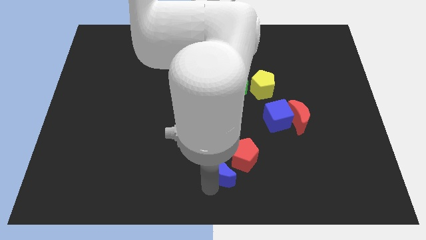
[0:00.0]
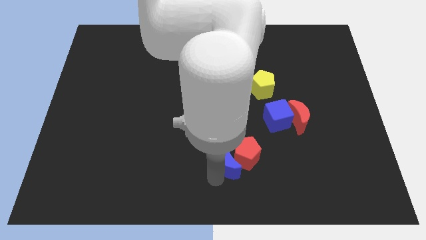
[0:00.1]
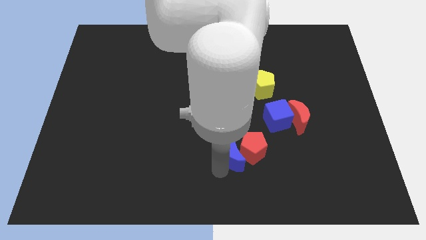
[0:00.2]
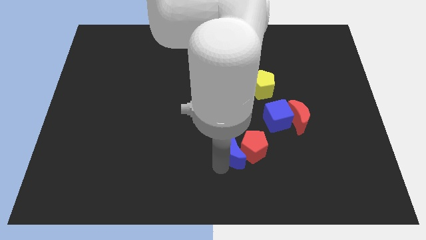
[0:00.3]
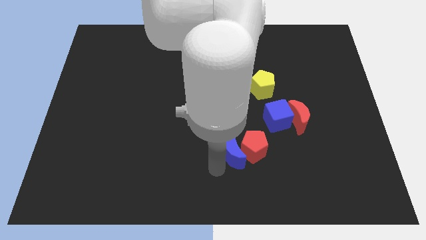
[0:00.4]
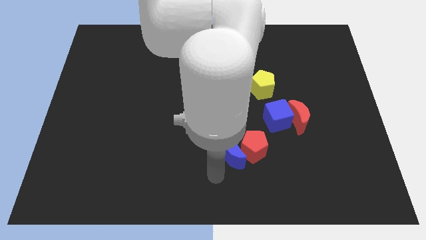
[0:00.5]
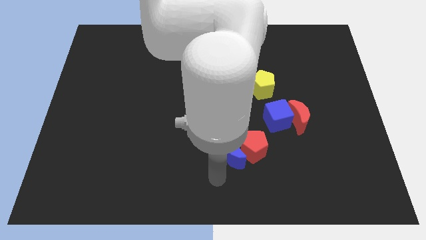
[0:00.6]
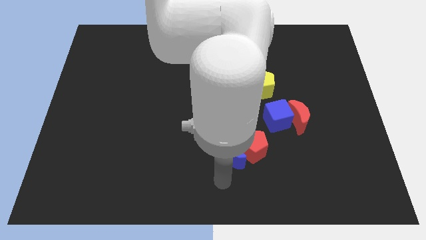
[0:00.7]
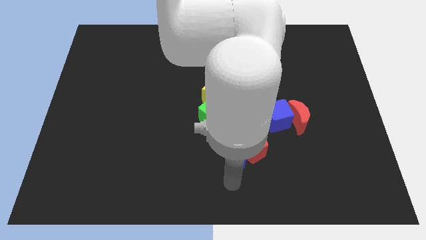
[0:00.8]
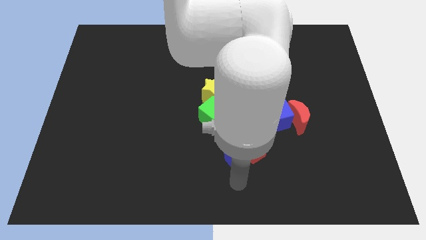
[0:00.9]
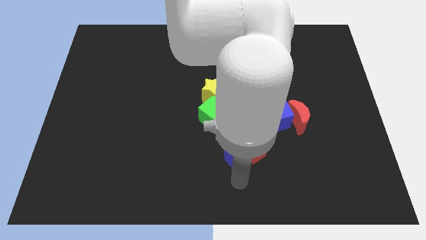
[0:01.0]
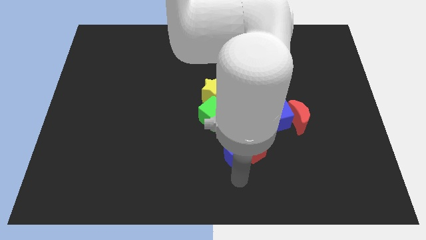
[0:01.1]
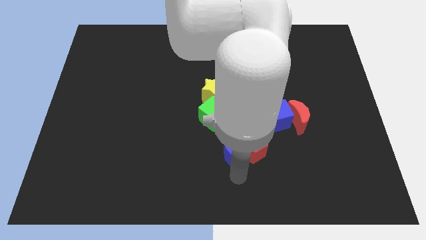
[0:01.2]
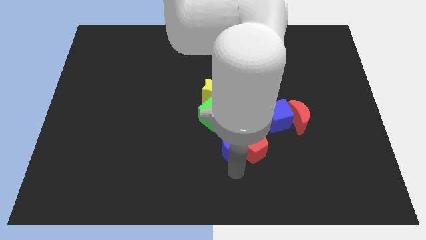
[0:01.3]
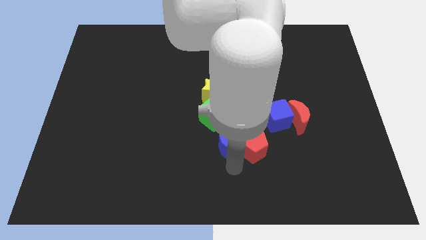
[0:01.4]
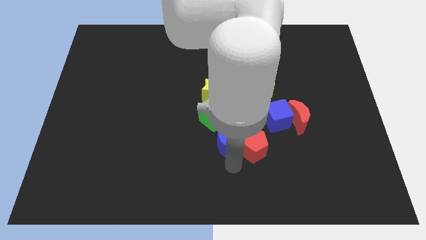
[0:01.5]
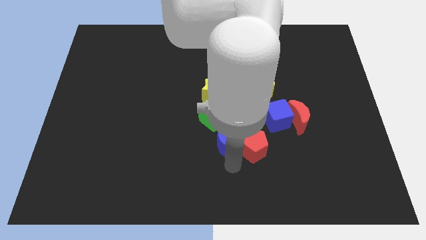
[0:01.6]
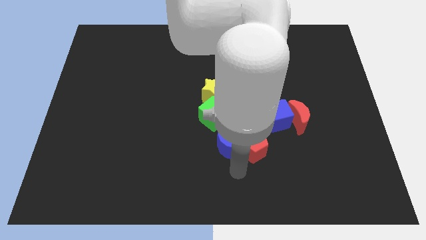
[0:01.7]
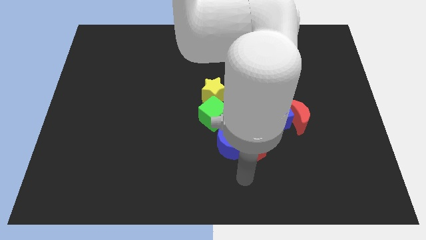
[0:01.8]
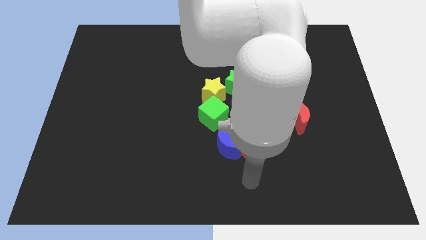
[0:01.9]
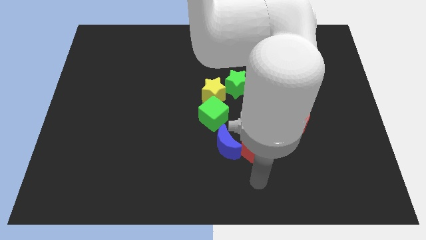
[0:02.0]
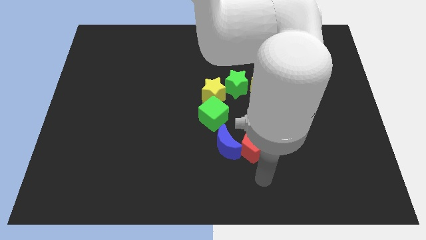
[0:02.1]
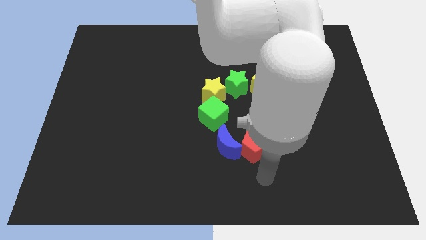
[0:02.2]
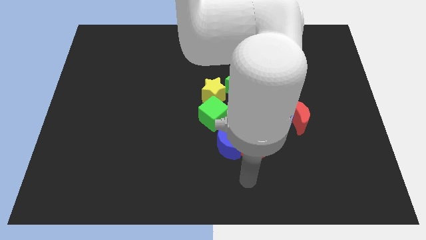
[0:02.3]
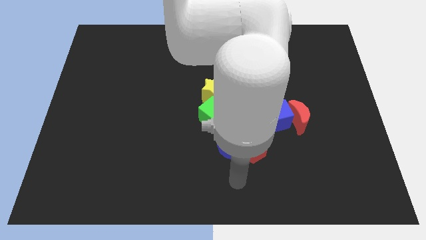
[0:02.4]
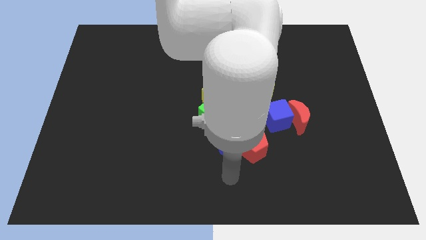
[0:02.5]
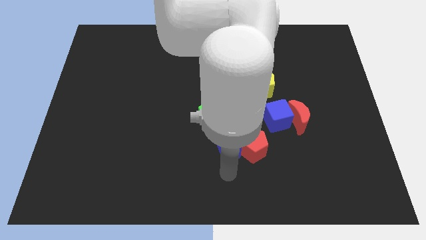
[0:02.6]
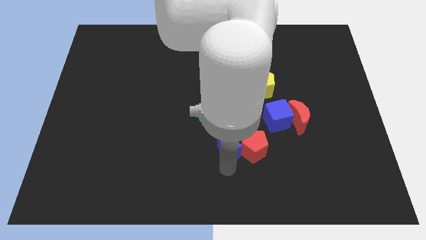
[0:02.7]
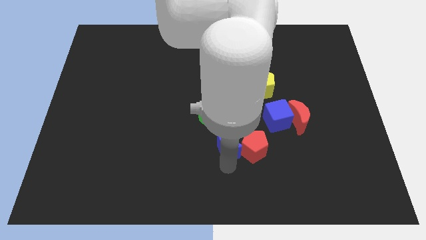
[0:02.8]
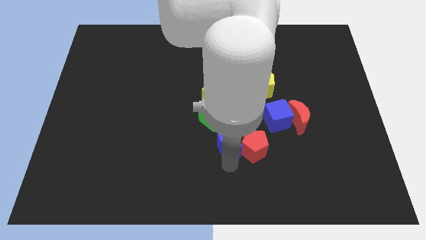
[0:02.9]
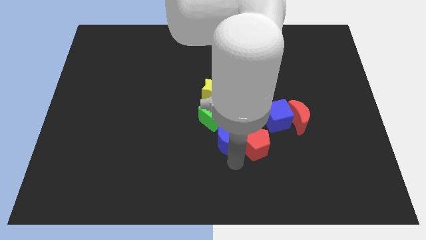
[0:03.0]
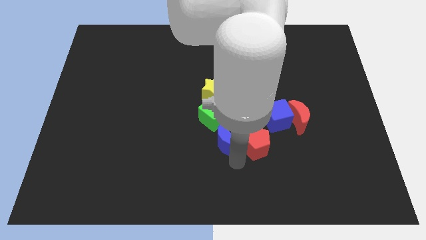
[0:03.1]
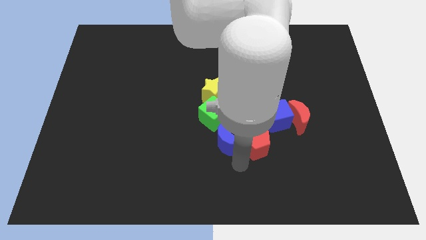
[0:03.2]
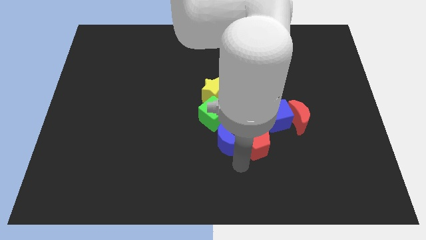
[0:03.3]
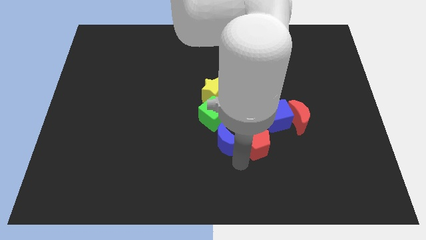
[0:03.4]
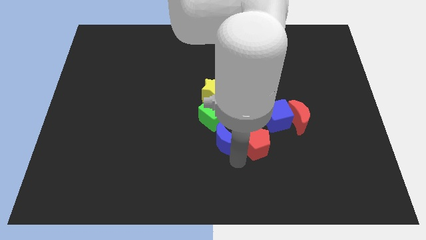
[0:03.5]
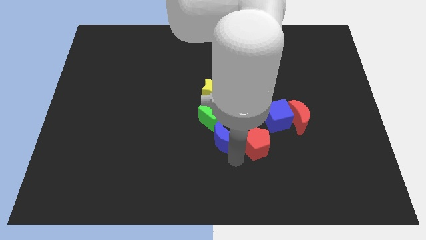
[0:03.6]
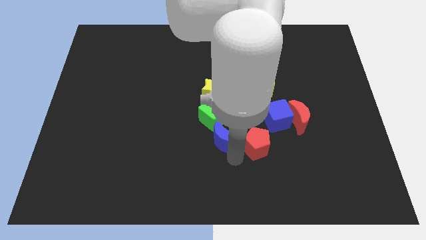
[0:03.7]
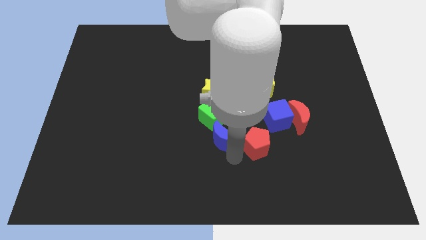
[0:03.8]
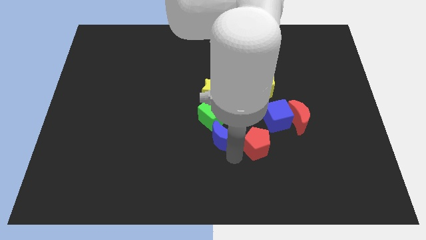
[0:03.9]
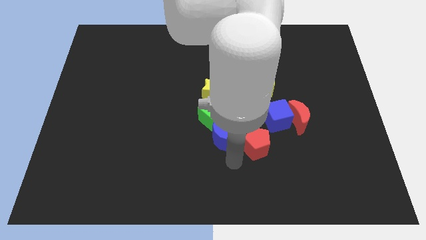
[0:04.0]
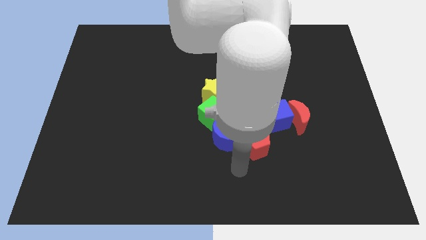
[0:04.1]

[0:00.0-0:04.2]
move the blue crescent below the green cube

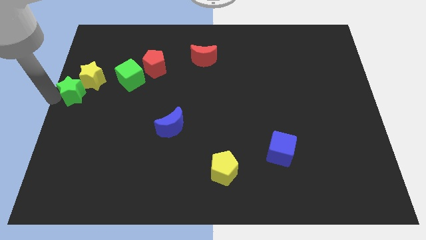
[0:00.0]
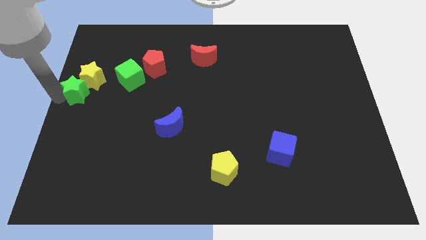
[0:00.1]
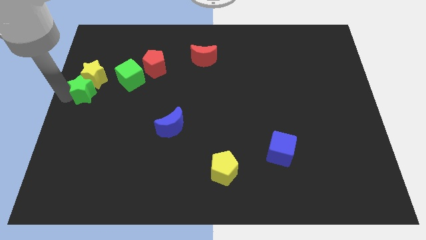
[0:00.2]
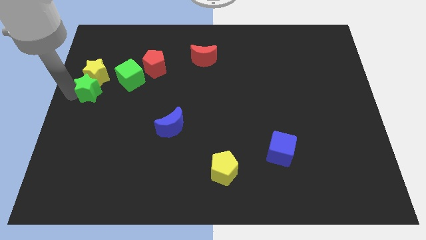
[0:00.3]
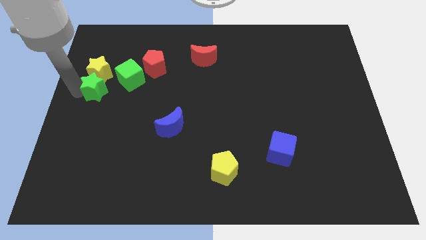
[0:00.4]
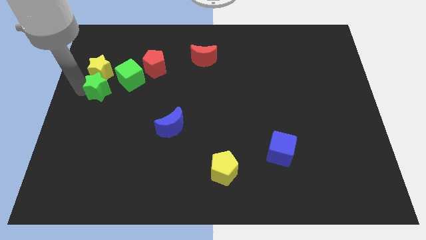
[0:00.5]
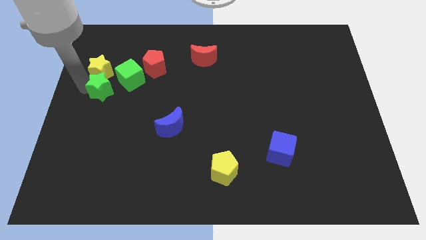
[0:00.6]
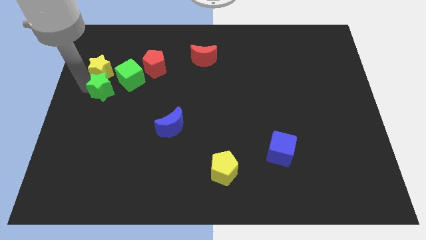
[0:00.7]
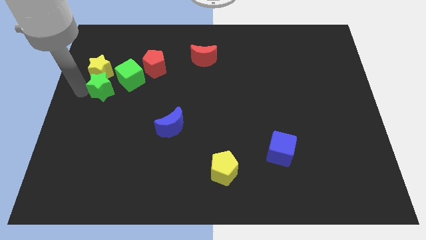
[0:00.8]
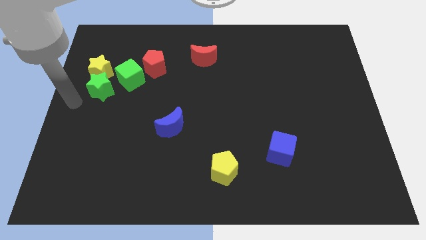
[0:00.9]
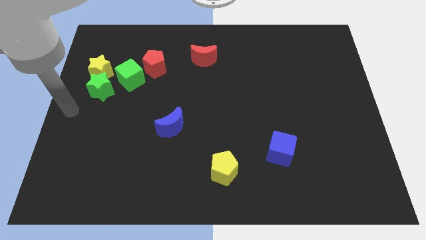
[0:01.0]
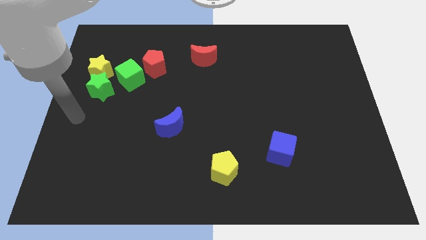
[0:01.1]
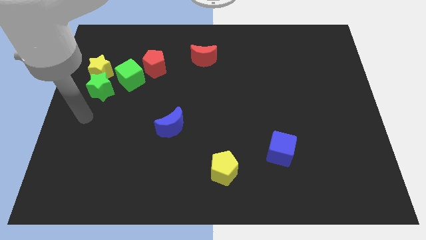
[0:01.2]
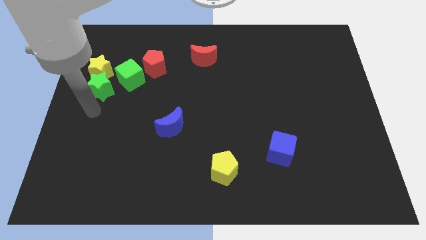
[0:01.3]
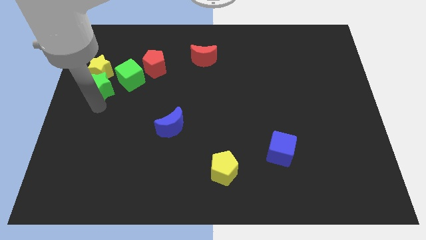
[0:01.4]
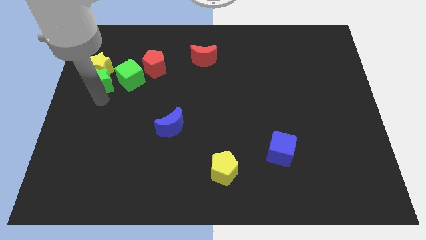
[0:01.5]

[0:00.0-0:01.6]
push the yellow star and green star close to the left side of the green cube

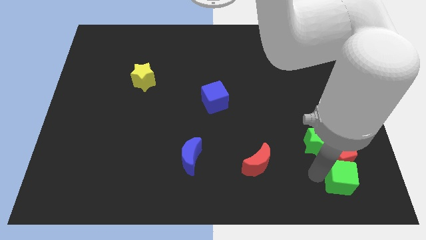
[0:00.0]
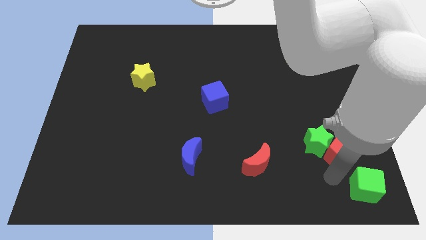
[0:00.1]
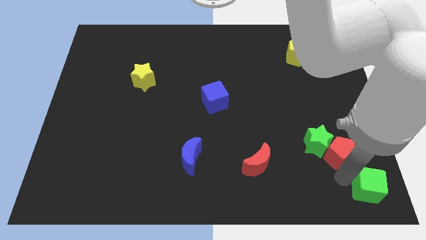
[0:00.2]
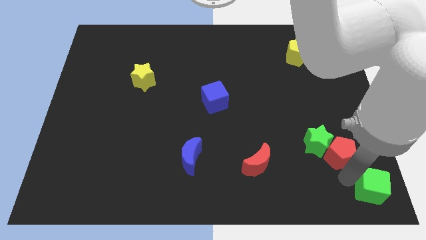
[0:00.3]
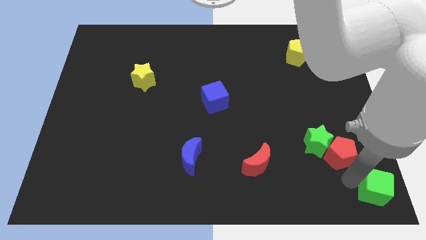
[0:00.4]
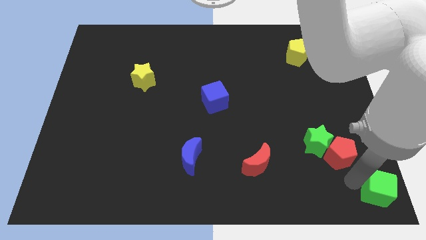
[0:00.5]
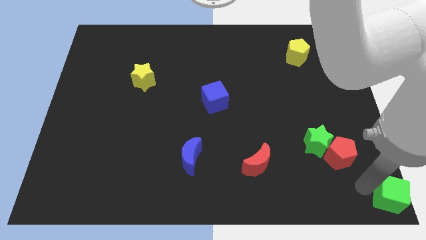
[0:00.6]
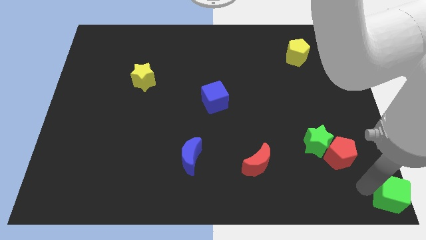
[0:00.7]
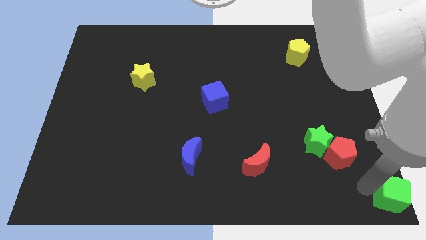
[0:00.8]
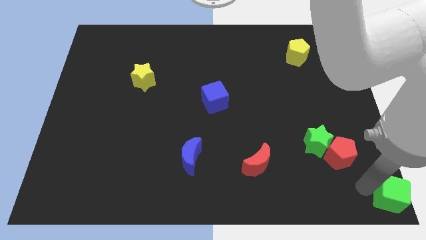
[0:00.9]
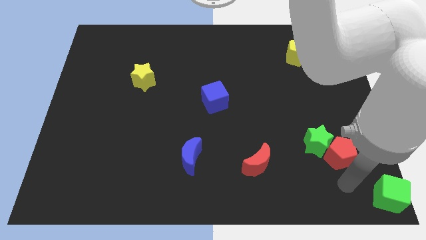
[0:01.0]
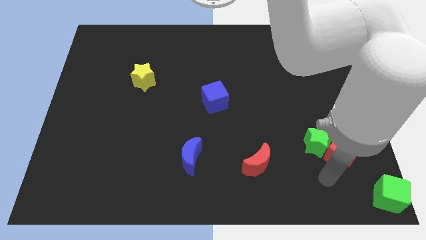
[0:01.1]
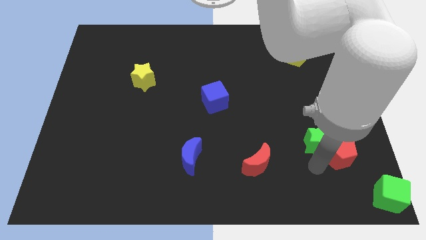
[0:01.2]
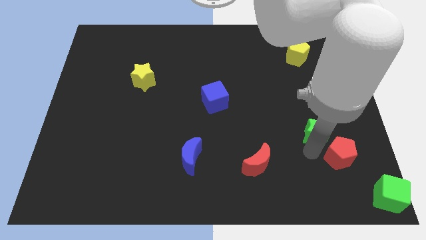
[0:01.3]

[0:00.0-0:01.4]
drag green cube towards bottom right corner of the board

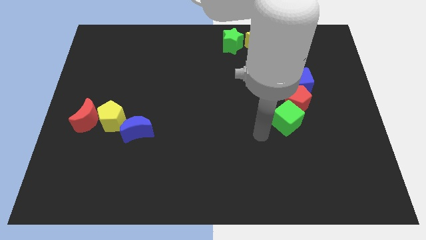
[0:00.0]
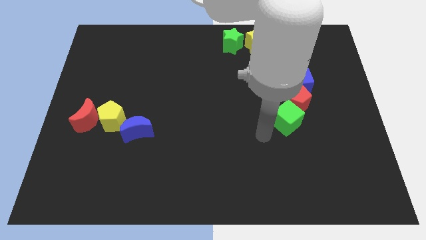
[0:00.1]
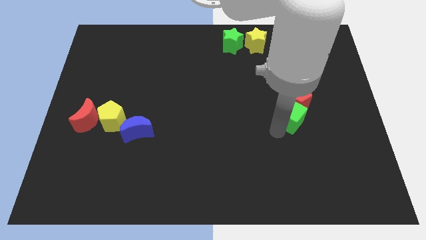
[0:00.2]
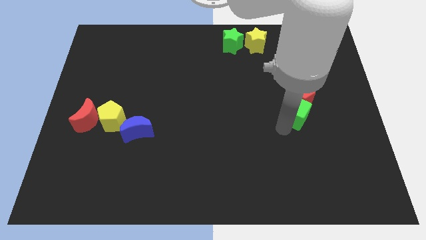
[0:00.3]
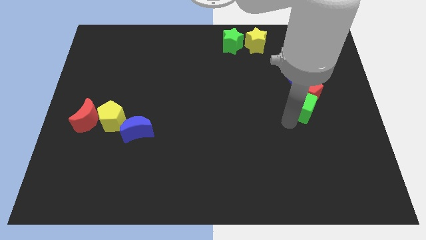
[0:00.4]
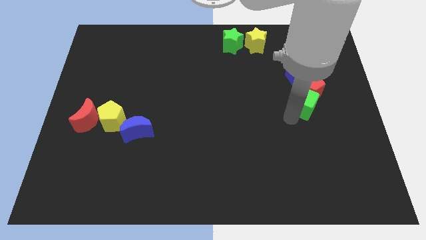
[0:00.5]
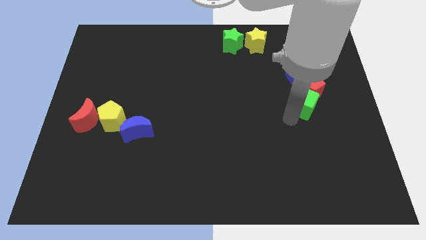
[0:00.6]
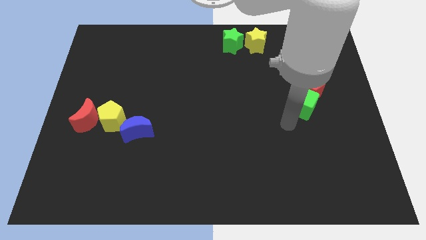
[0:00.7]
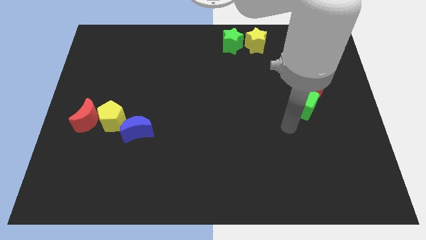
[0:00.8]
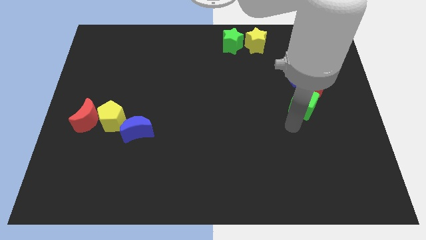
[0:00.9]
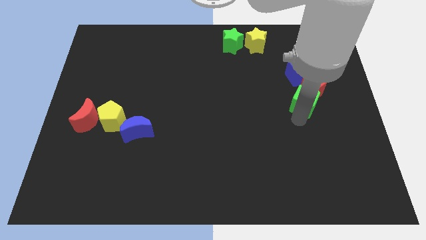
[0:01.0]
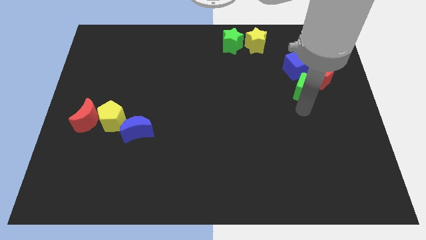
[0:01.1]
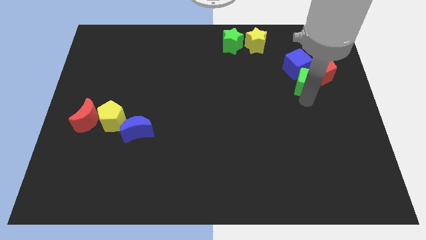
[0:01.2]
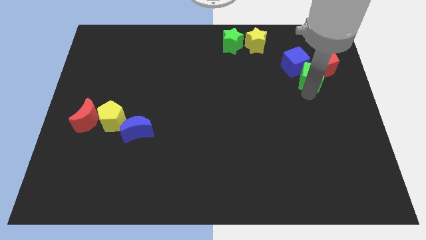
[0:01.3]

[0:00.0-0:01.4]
slide both the cubes and red pentagon towards the top side of the board

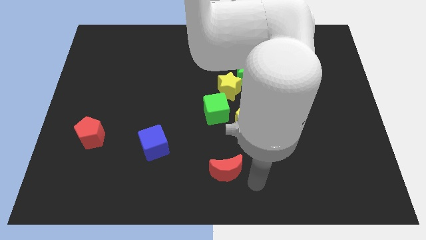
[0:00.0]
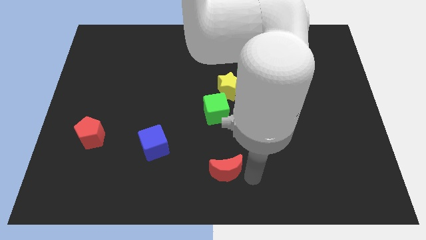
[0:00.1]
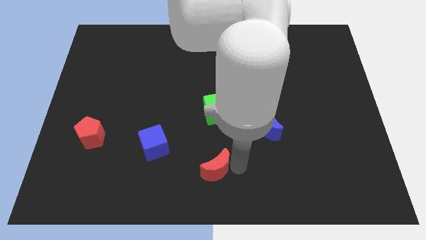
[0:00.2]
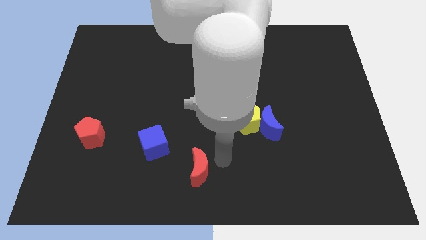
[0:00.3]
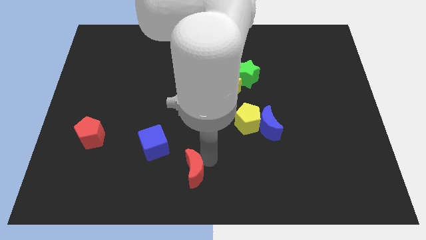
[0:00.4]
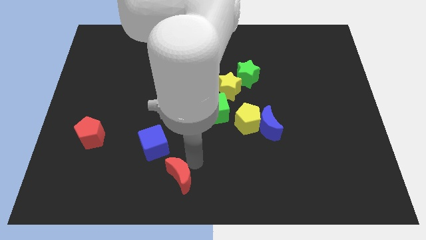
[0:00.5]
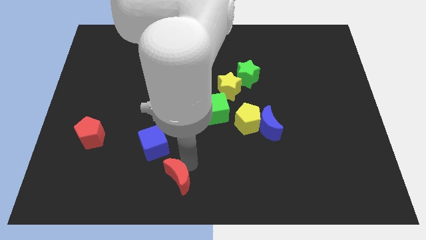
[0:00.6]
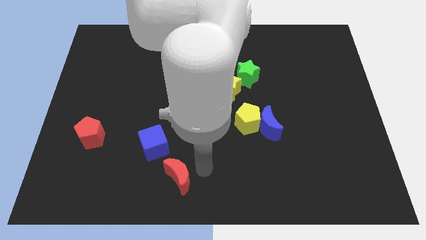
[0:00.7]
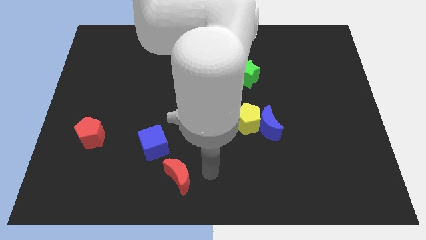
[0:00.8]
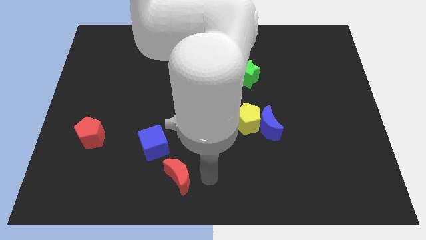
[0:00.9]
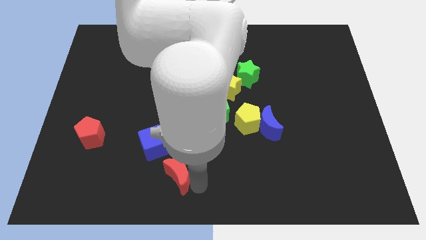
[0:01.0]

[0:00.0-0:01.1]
place the red moon below the blue cube
